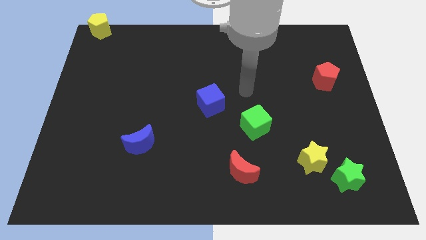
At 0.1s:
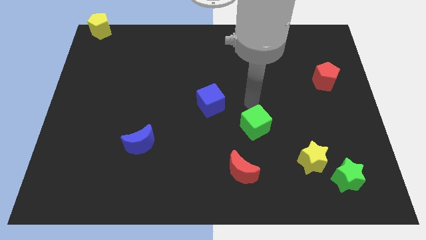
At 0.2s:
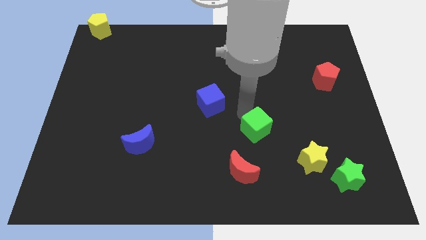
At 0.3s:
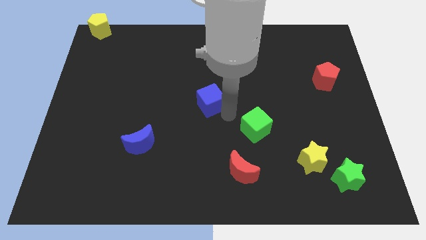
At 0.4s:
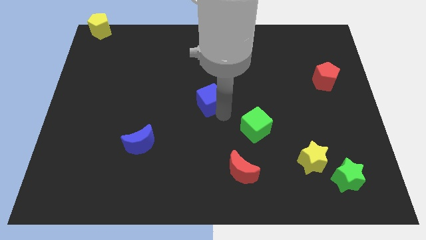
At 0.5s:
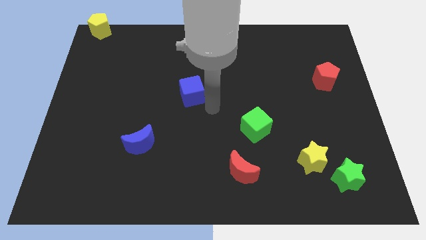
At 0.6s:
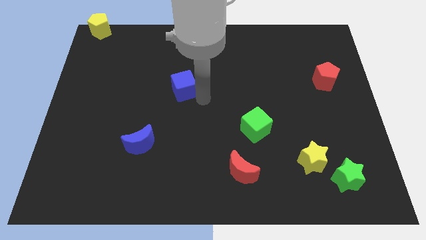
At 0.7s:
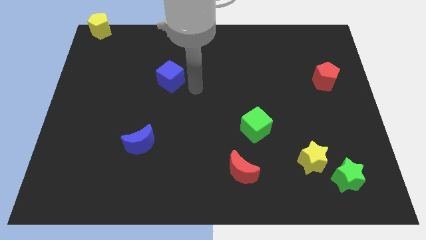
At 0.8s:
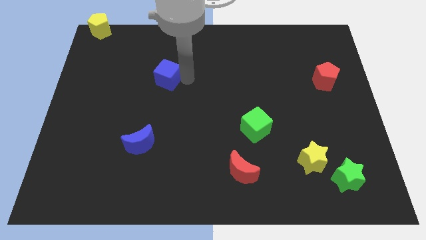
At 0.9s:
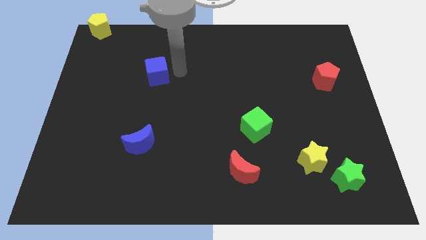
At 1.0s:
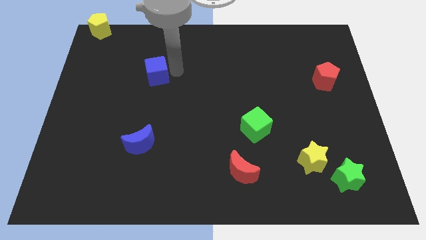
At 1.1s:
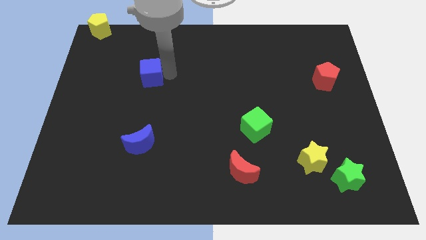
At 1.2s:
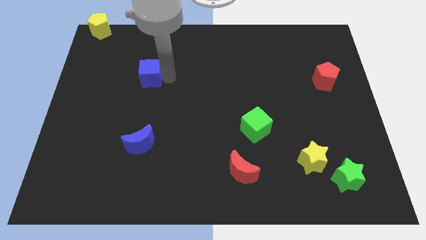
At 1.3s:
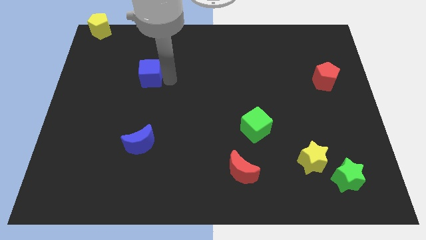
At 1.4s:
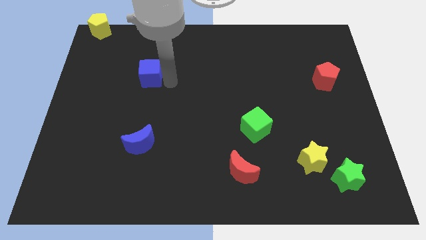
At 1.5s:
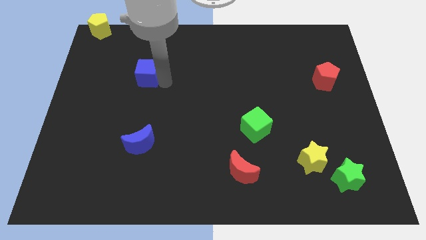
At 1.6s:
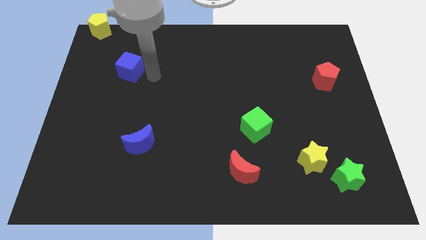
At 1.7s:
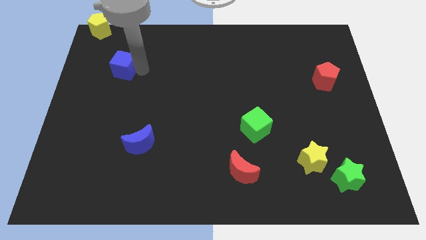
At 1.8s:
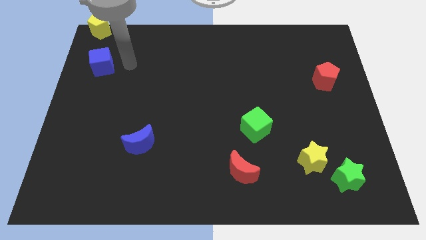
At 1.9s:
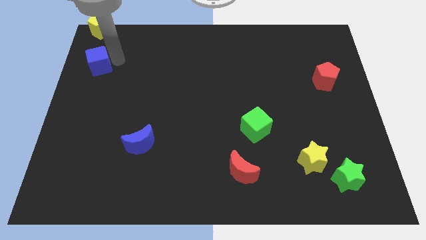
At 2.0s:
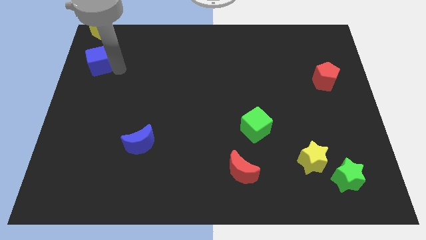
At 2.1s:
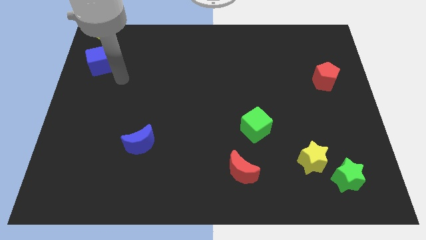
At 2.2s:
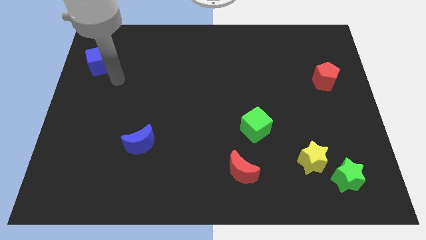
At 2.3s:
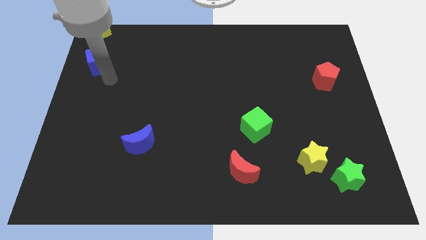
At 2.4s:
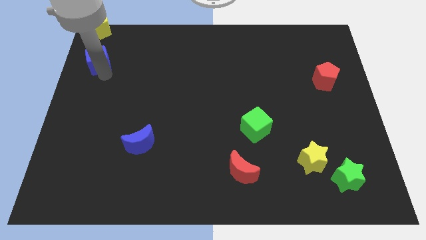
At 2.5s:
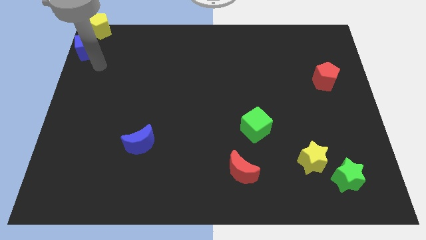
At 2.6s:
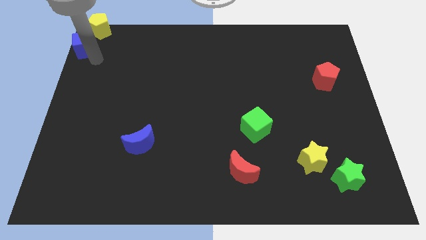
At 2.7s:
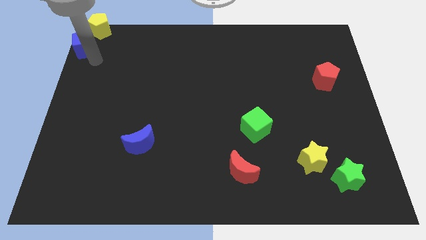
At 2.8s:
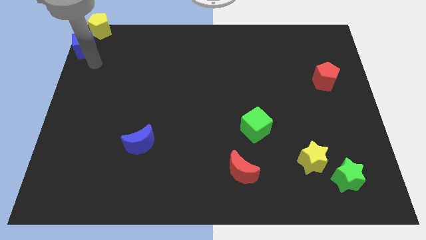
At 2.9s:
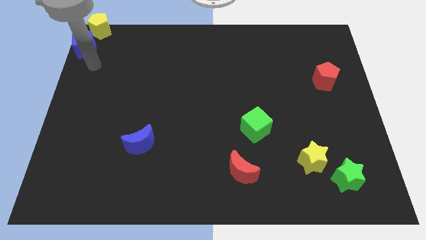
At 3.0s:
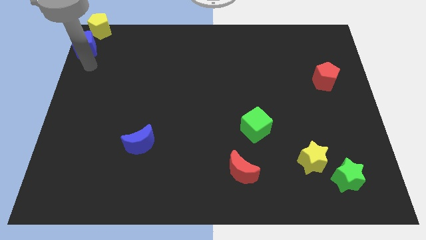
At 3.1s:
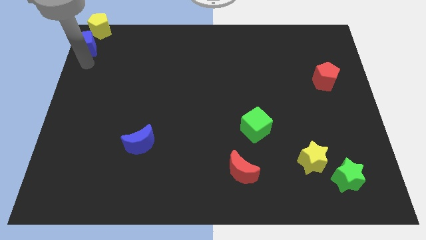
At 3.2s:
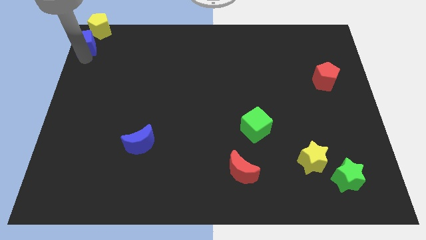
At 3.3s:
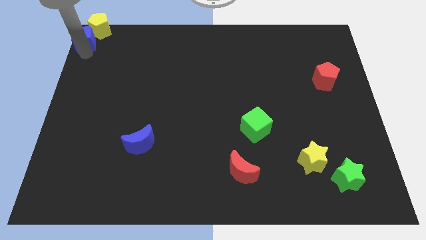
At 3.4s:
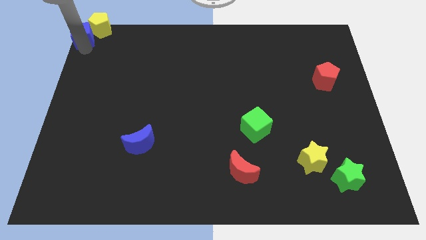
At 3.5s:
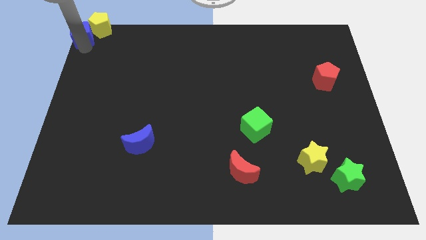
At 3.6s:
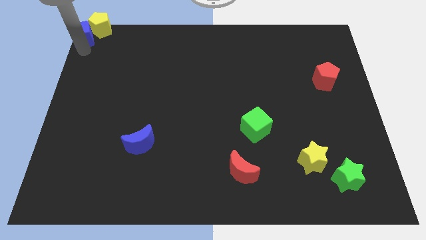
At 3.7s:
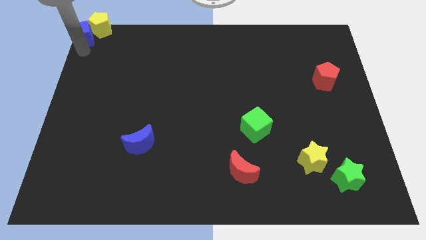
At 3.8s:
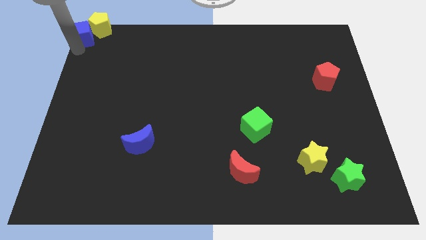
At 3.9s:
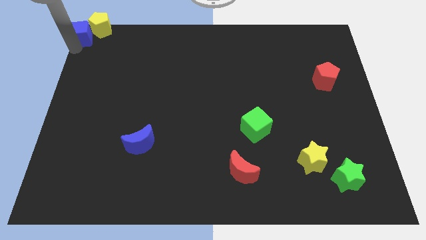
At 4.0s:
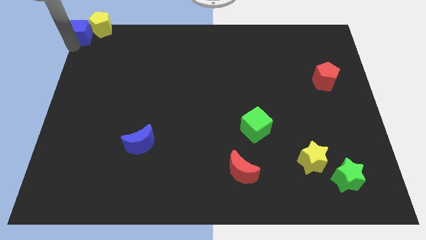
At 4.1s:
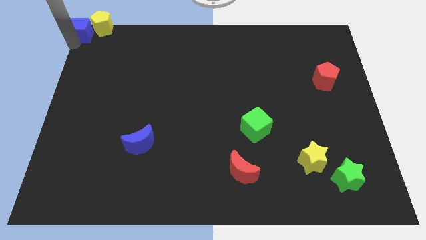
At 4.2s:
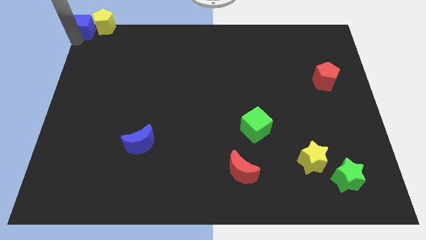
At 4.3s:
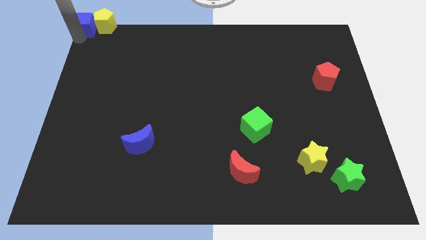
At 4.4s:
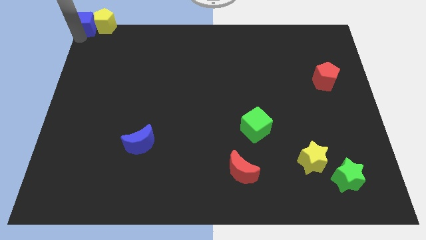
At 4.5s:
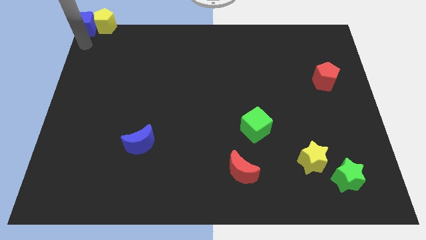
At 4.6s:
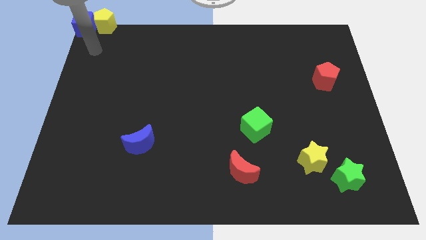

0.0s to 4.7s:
move the blue cube to the top left corner

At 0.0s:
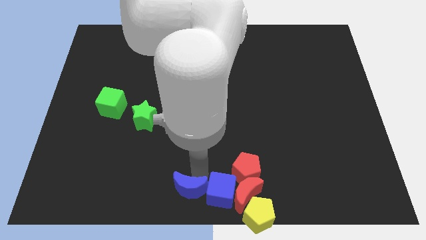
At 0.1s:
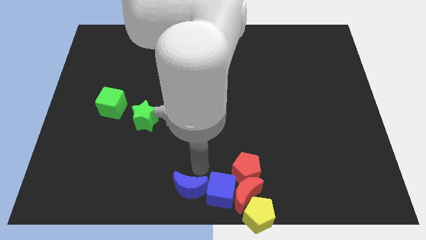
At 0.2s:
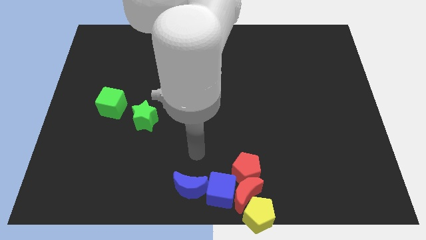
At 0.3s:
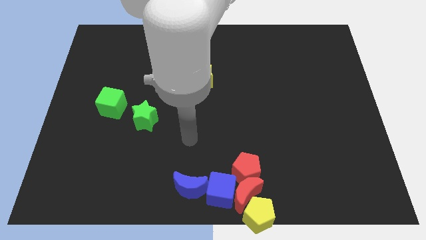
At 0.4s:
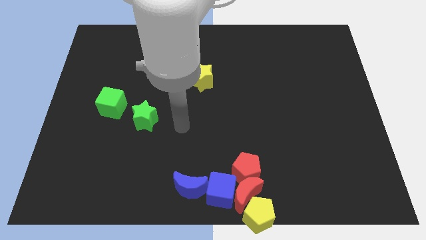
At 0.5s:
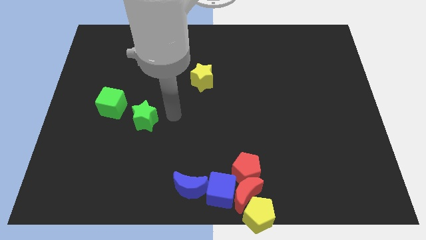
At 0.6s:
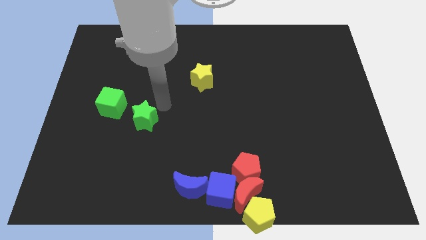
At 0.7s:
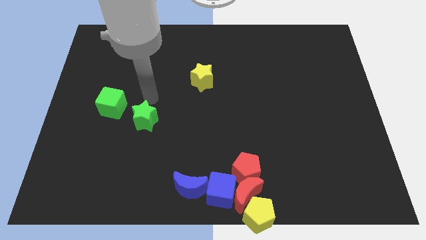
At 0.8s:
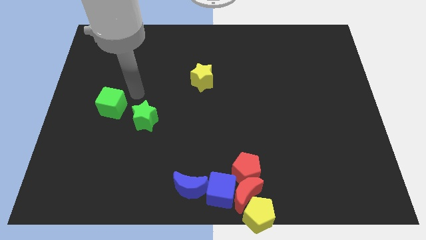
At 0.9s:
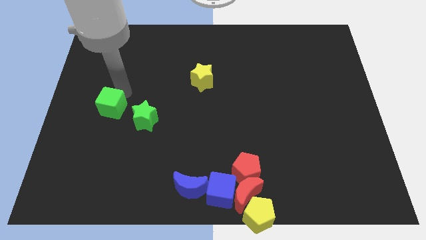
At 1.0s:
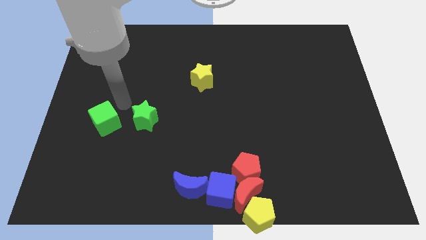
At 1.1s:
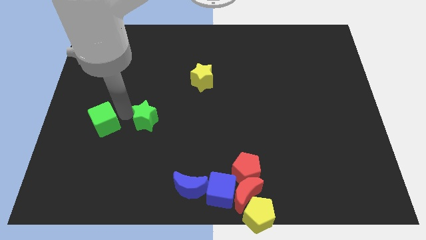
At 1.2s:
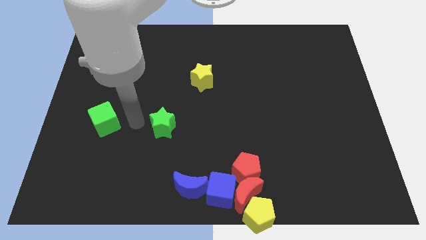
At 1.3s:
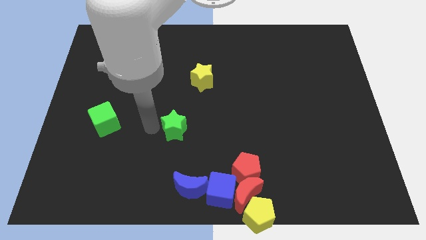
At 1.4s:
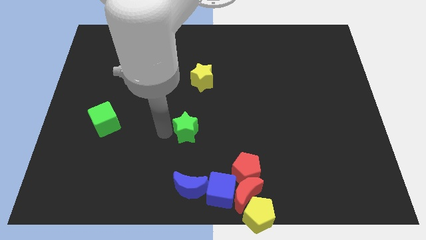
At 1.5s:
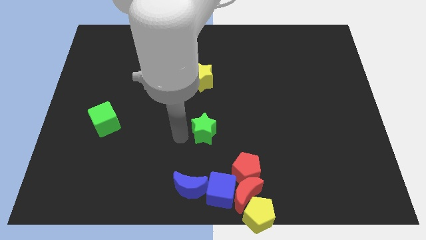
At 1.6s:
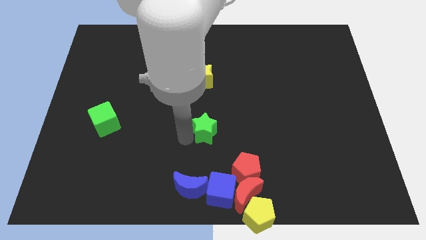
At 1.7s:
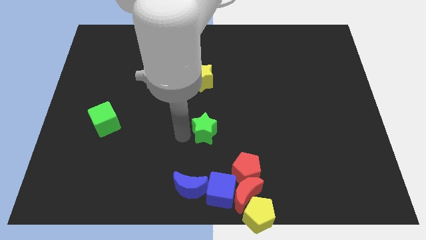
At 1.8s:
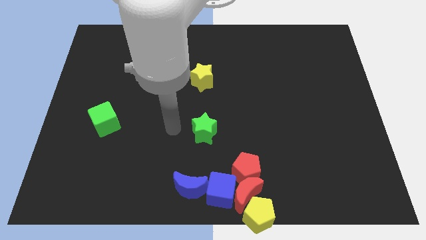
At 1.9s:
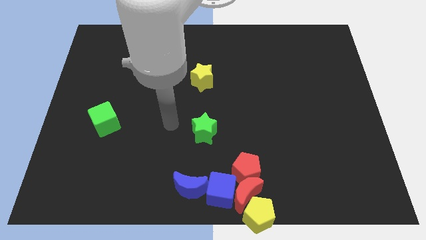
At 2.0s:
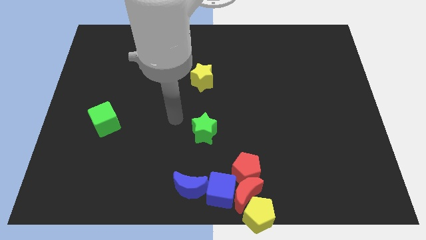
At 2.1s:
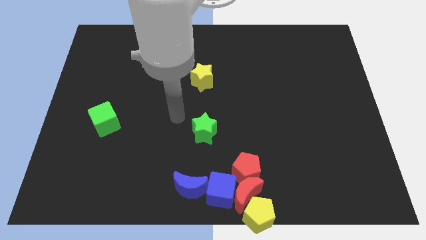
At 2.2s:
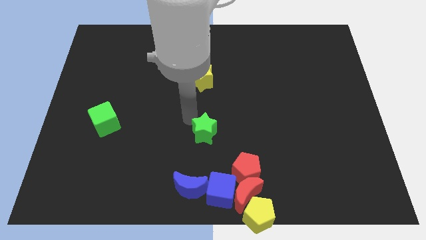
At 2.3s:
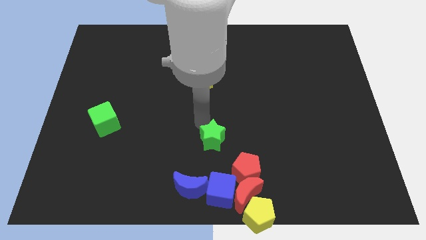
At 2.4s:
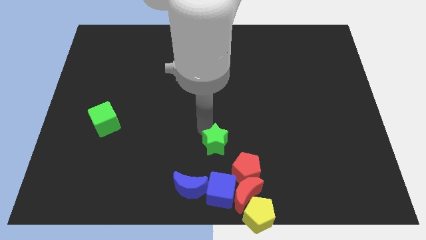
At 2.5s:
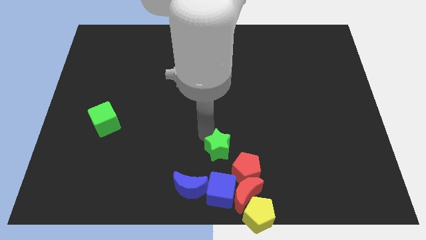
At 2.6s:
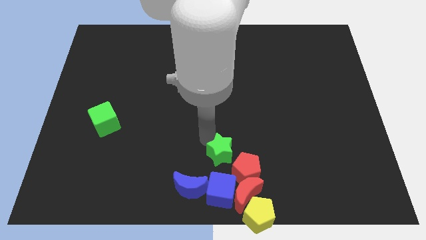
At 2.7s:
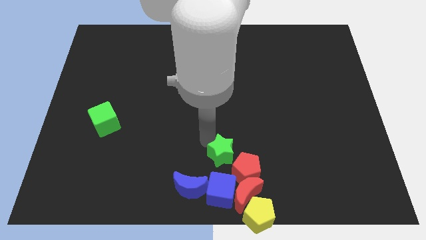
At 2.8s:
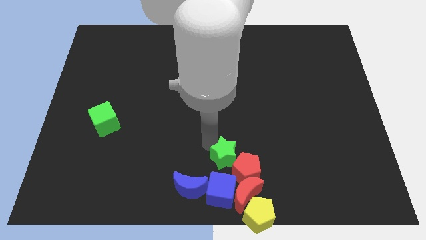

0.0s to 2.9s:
push the green star to the top of the blue cube

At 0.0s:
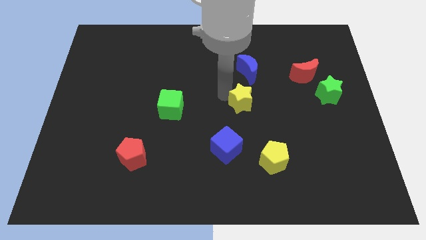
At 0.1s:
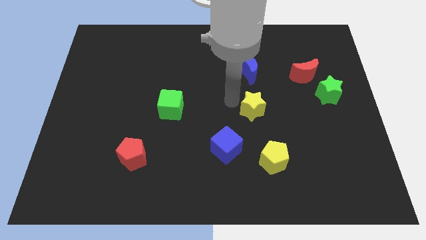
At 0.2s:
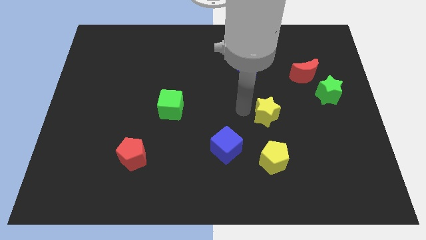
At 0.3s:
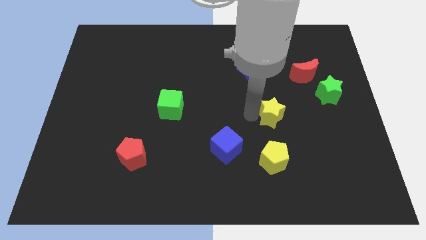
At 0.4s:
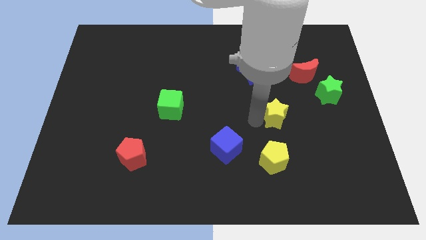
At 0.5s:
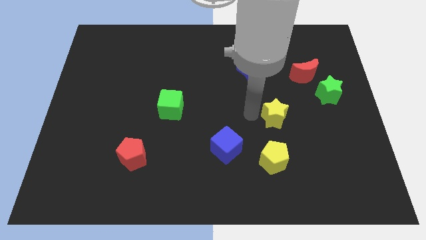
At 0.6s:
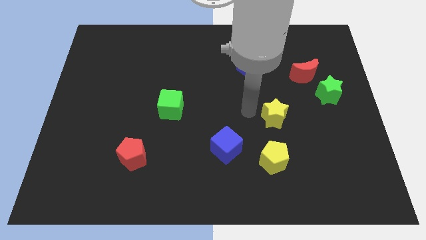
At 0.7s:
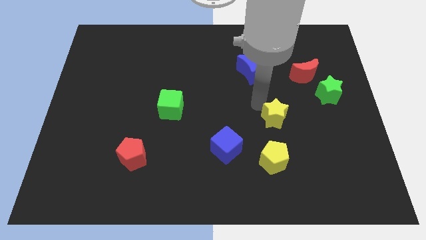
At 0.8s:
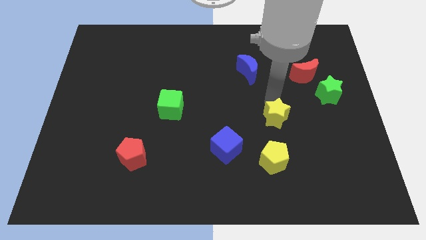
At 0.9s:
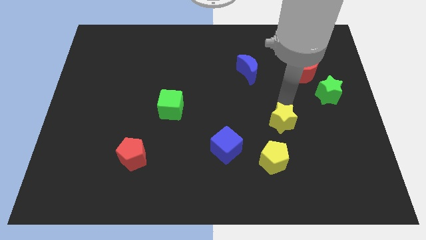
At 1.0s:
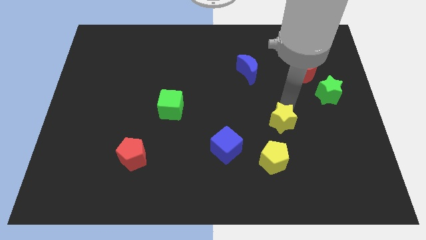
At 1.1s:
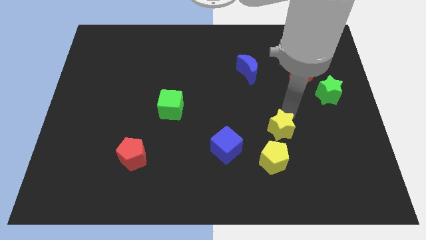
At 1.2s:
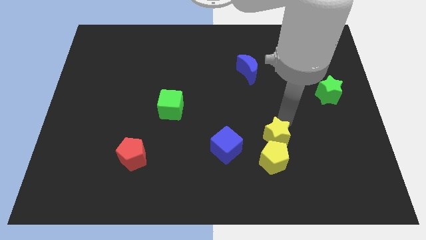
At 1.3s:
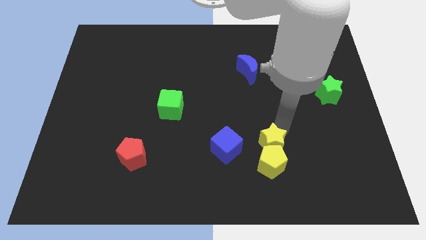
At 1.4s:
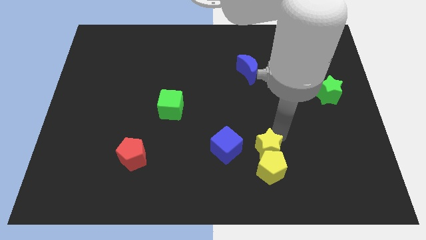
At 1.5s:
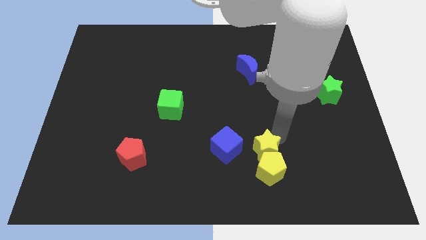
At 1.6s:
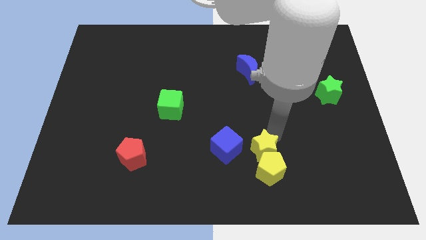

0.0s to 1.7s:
push the yellow star into the yellow pentagon
